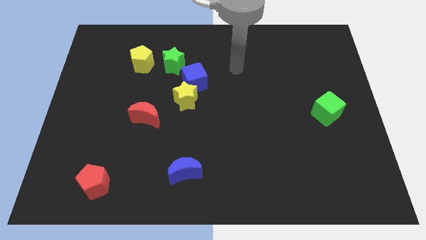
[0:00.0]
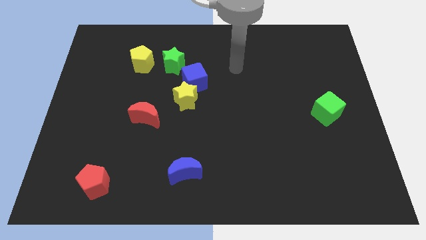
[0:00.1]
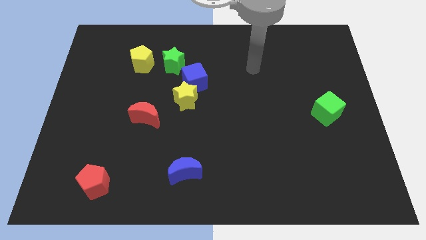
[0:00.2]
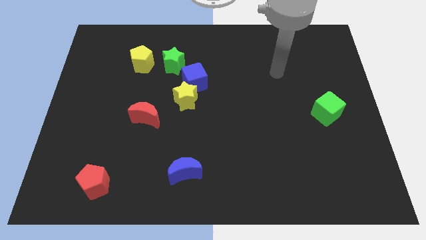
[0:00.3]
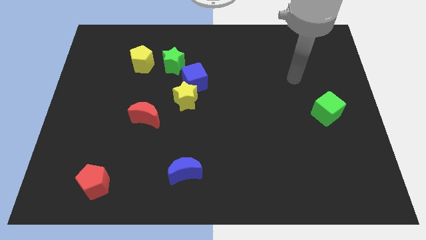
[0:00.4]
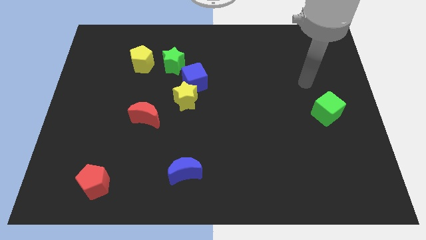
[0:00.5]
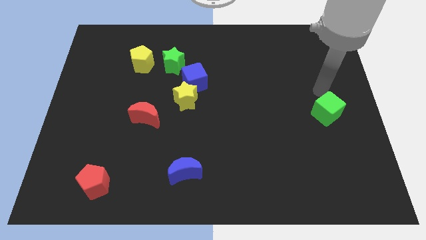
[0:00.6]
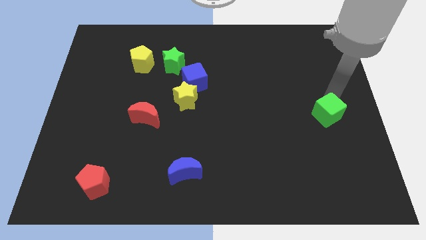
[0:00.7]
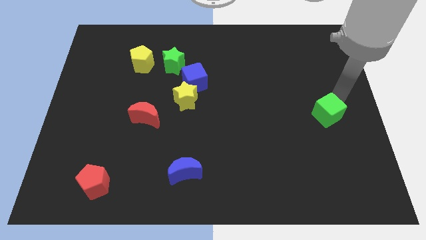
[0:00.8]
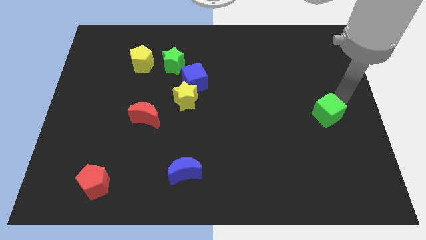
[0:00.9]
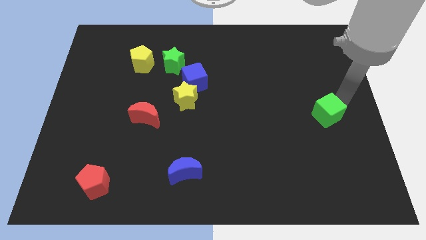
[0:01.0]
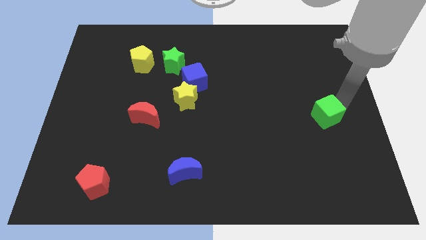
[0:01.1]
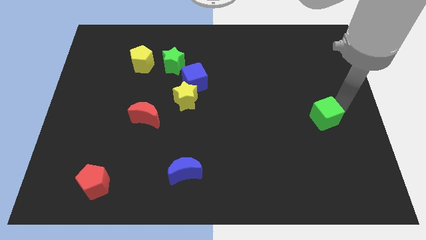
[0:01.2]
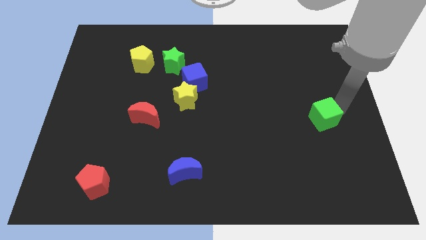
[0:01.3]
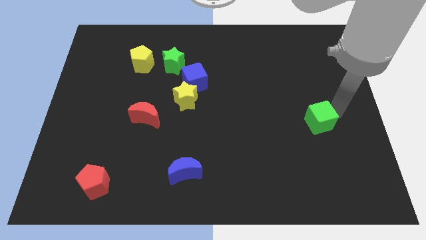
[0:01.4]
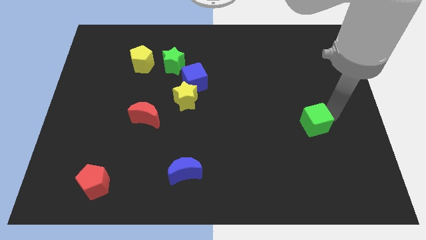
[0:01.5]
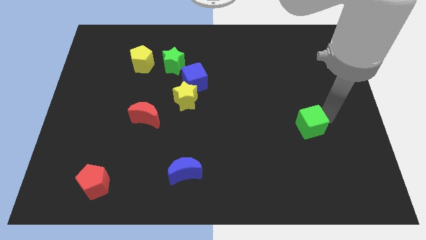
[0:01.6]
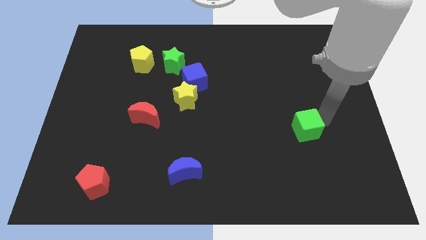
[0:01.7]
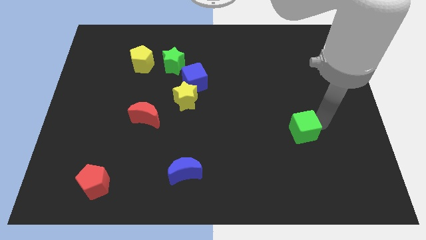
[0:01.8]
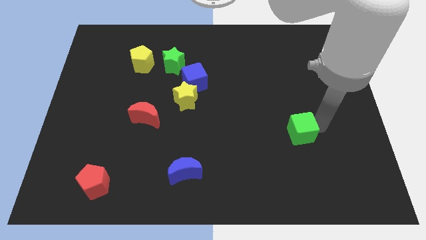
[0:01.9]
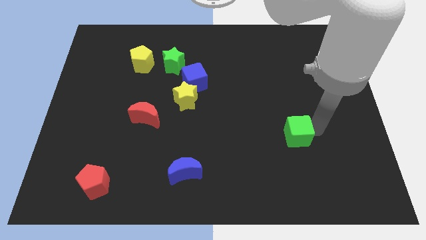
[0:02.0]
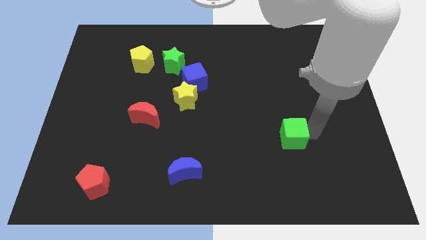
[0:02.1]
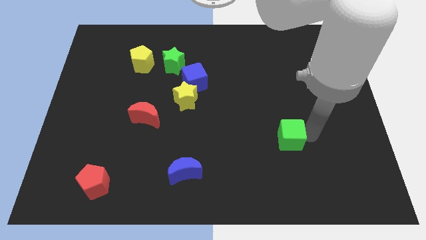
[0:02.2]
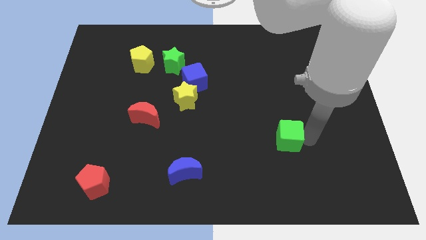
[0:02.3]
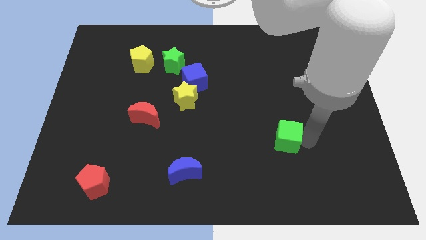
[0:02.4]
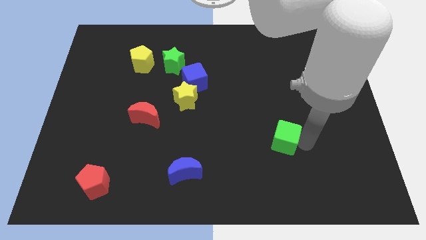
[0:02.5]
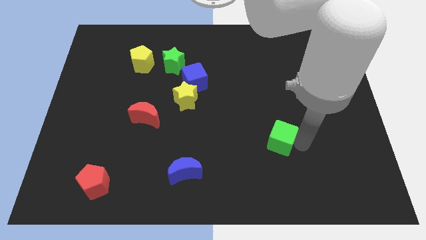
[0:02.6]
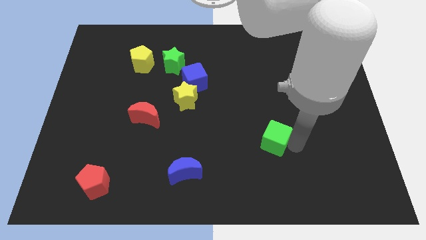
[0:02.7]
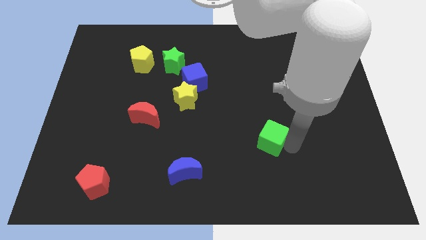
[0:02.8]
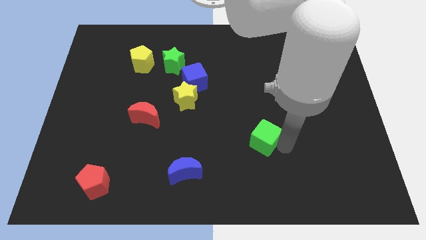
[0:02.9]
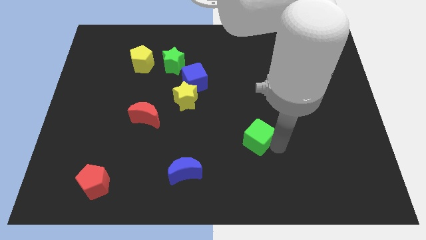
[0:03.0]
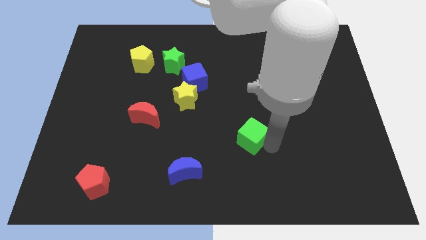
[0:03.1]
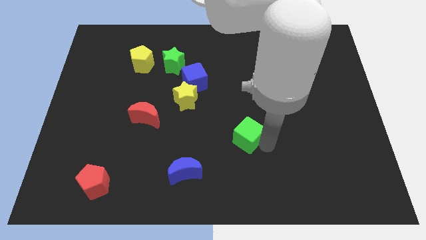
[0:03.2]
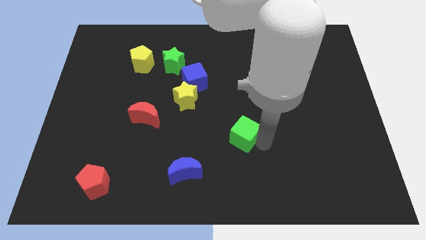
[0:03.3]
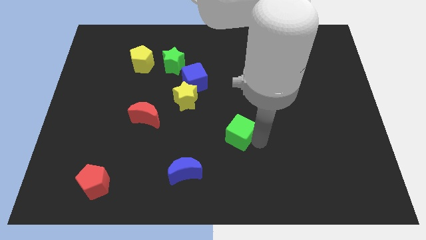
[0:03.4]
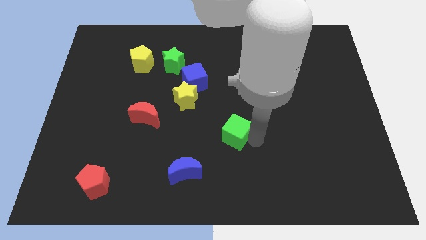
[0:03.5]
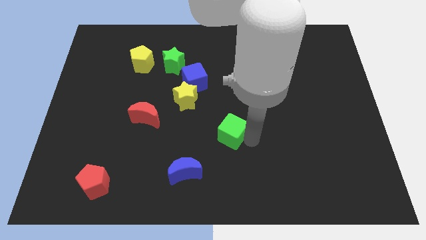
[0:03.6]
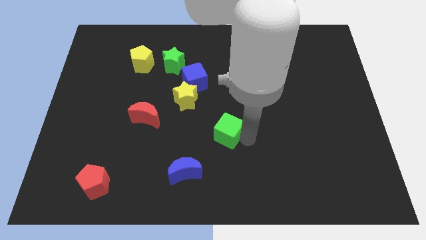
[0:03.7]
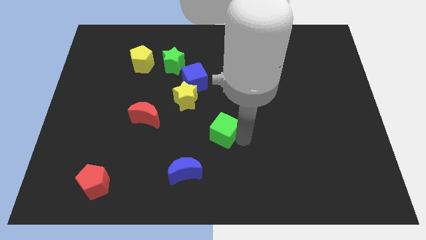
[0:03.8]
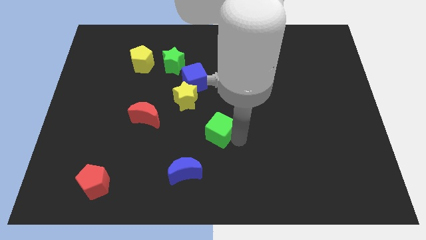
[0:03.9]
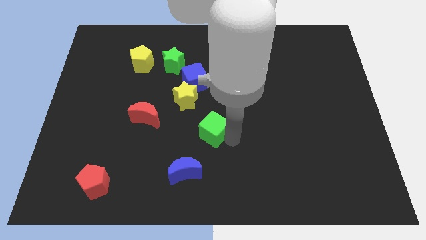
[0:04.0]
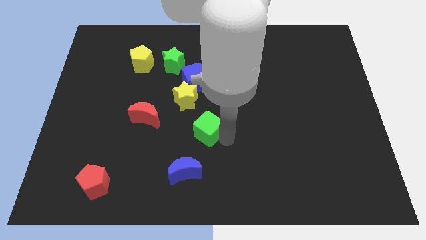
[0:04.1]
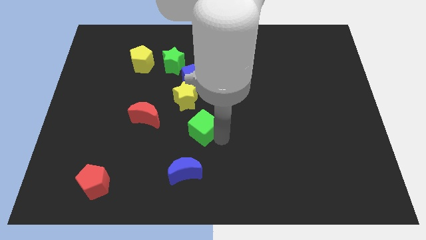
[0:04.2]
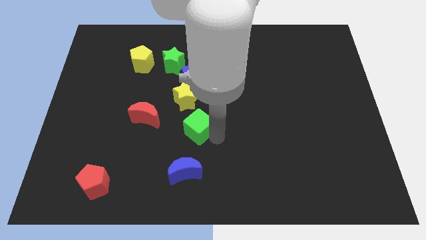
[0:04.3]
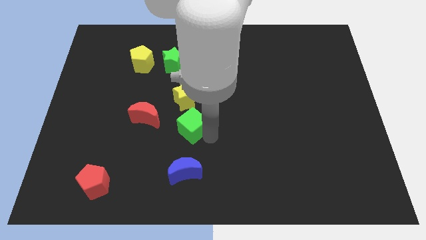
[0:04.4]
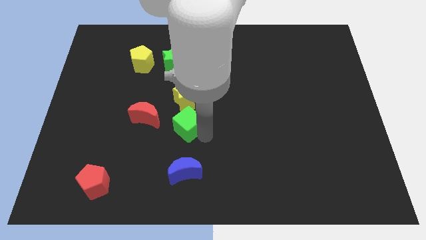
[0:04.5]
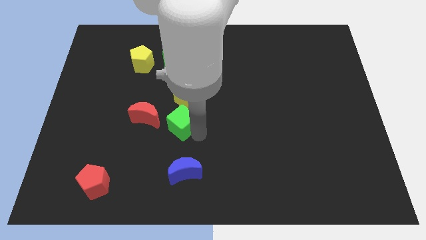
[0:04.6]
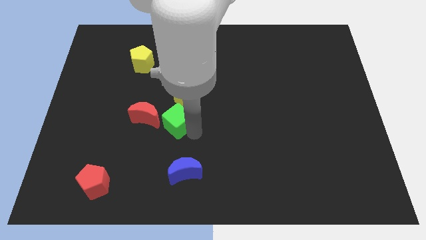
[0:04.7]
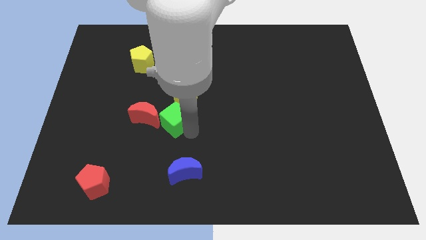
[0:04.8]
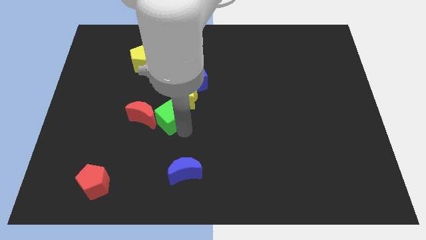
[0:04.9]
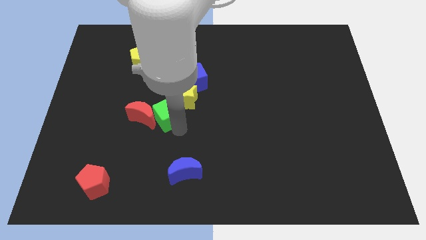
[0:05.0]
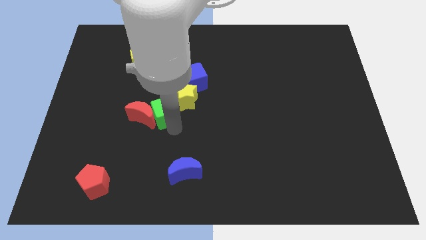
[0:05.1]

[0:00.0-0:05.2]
push the green cube close to the red moon

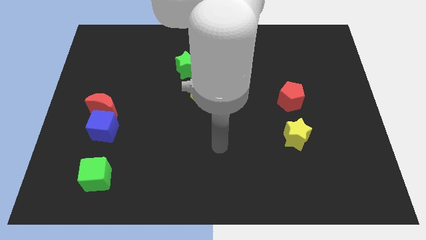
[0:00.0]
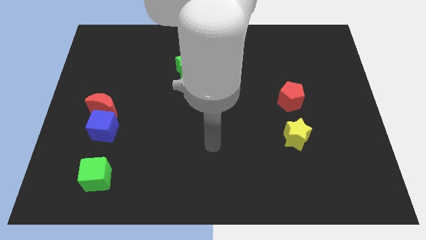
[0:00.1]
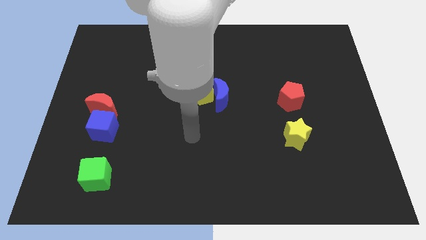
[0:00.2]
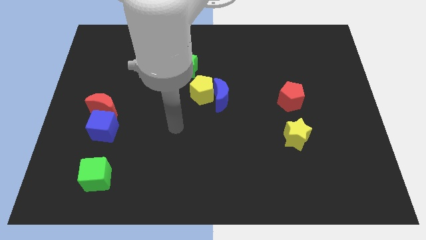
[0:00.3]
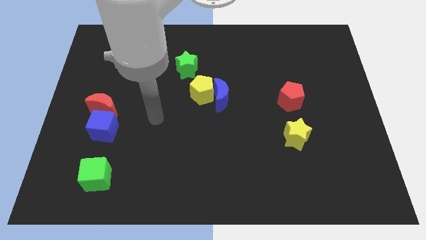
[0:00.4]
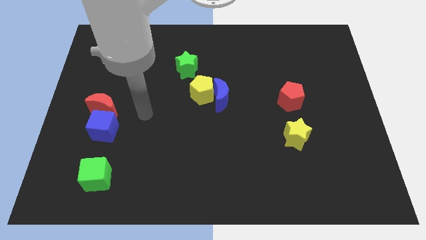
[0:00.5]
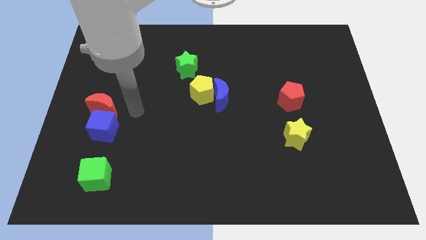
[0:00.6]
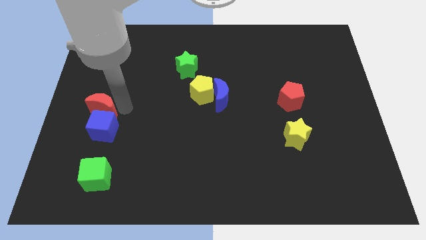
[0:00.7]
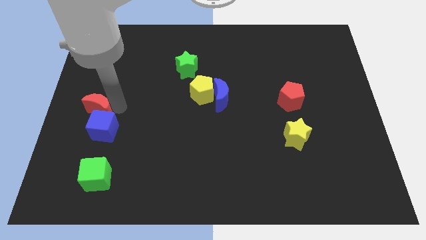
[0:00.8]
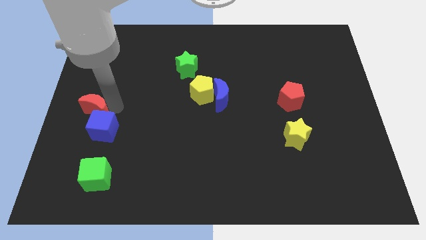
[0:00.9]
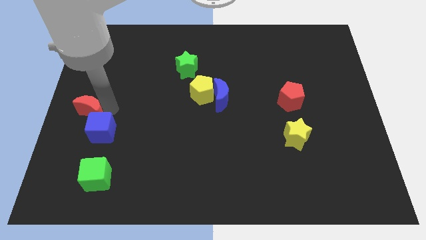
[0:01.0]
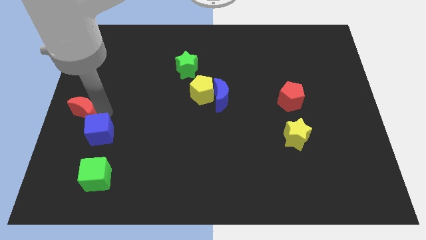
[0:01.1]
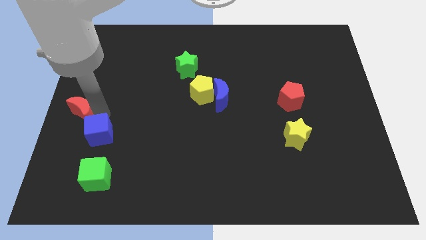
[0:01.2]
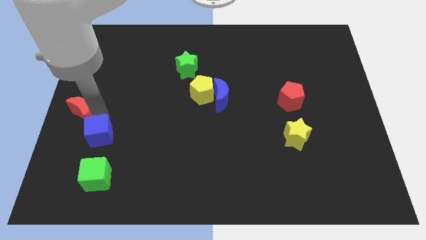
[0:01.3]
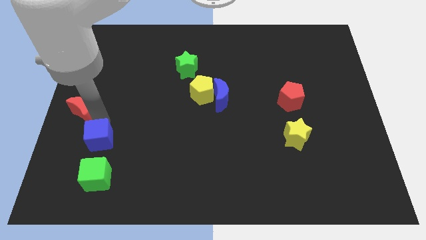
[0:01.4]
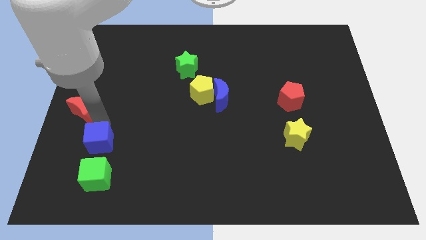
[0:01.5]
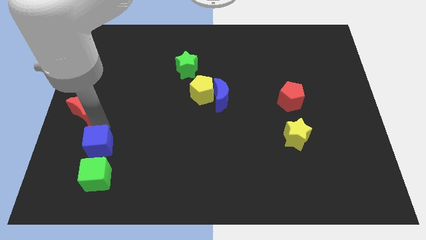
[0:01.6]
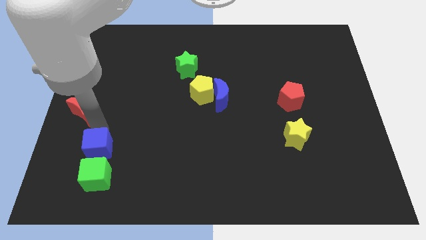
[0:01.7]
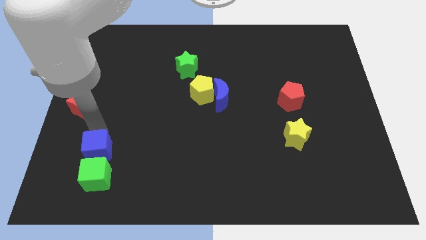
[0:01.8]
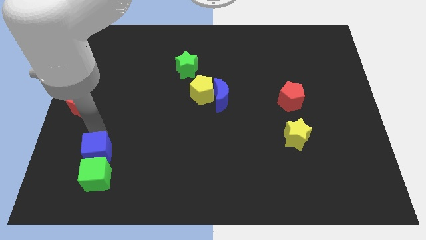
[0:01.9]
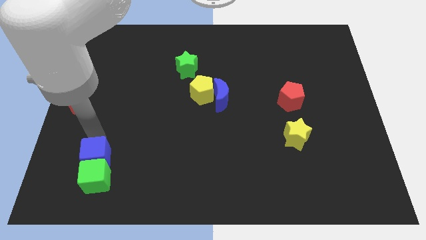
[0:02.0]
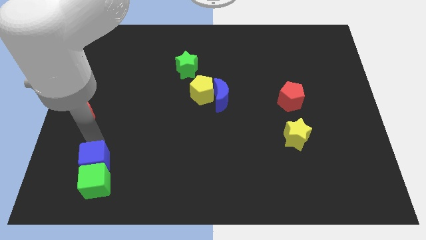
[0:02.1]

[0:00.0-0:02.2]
slide the blue cube to the green cube

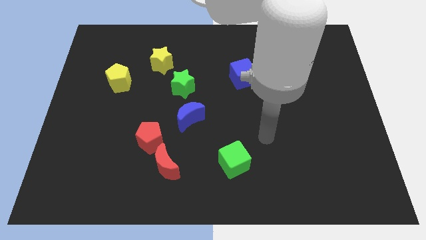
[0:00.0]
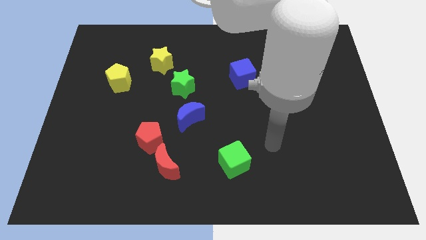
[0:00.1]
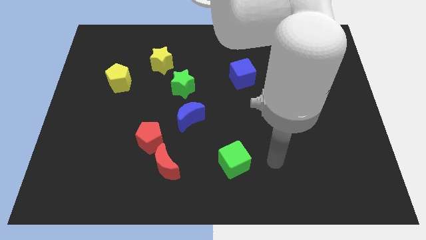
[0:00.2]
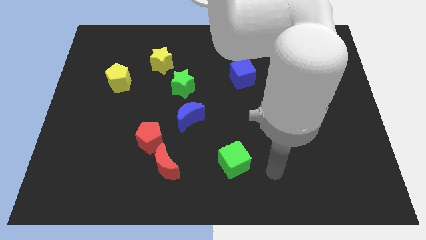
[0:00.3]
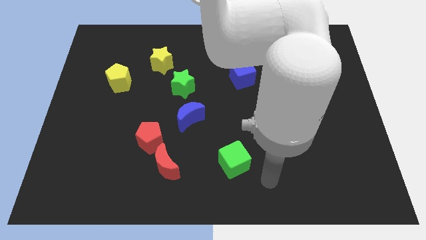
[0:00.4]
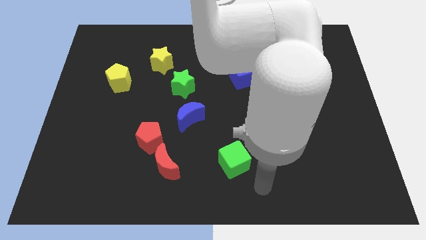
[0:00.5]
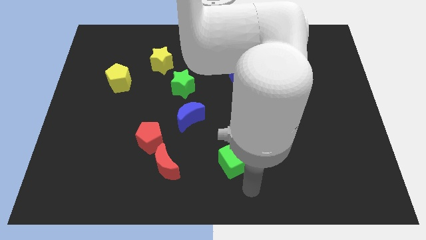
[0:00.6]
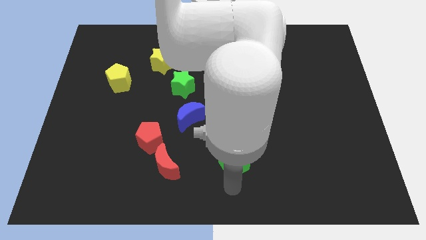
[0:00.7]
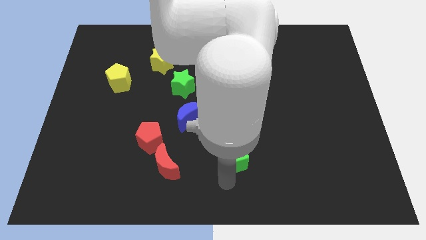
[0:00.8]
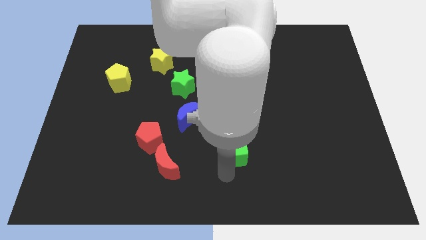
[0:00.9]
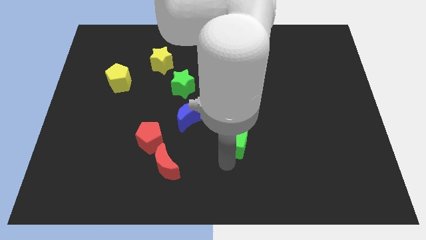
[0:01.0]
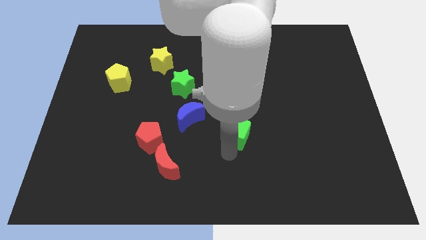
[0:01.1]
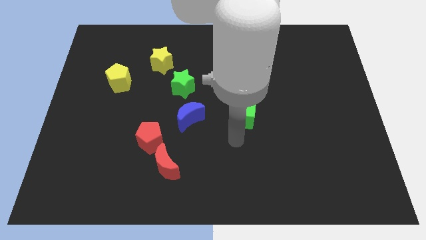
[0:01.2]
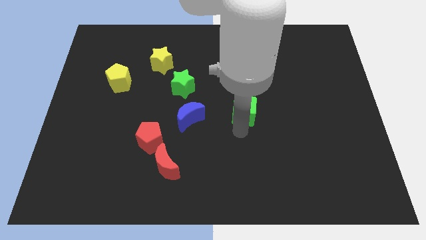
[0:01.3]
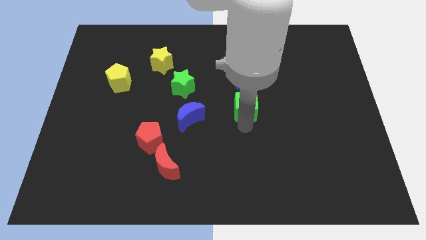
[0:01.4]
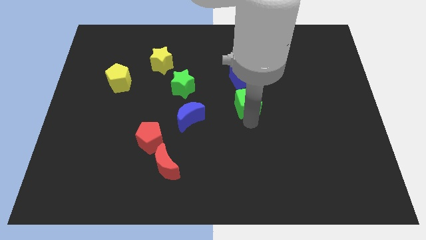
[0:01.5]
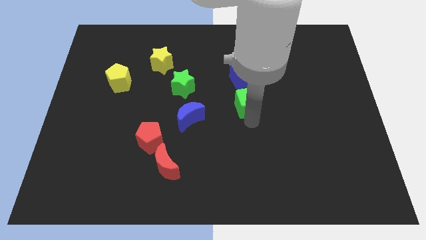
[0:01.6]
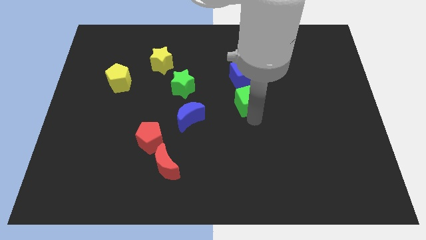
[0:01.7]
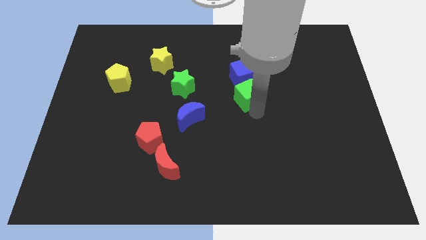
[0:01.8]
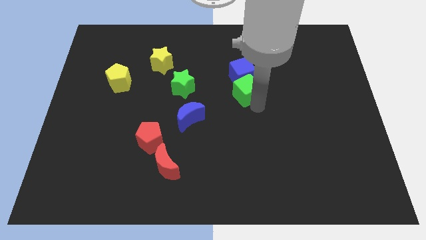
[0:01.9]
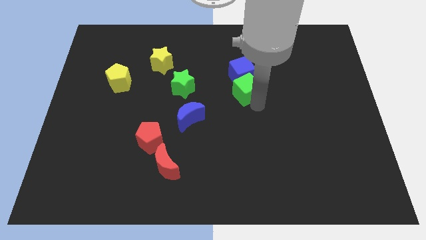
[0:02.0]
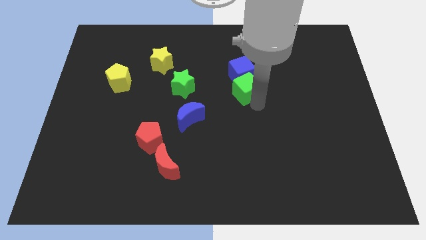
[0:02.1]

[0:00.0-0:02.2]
slide the green cube to the blue cube
